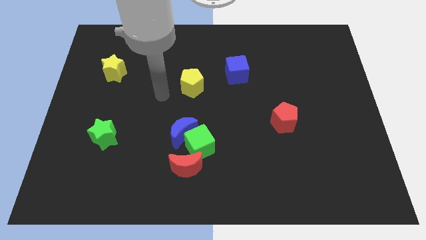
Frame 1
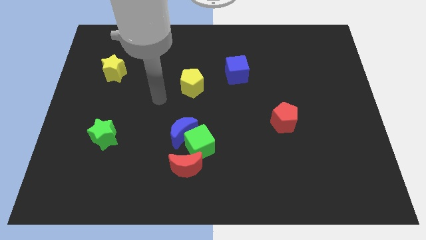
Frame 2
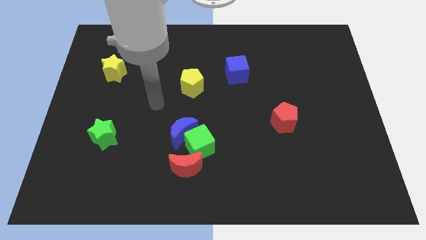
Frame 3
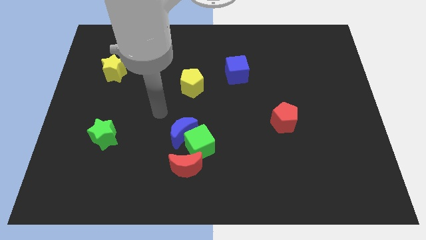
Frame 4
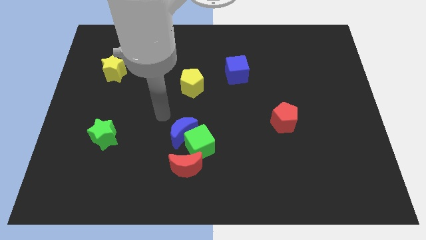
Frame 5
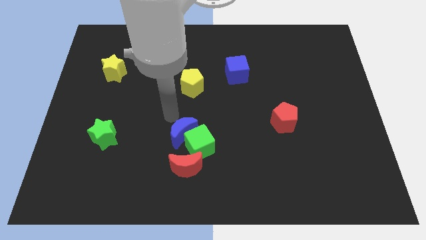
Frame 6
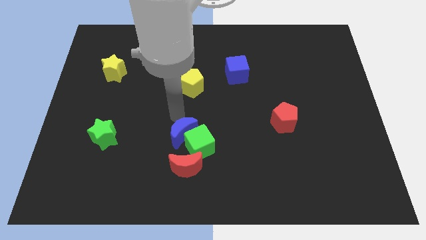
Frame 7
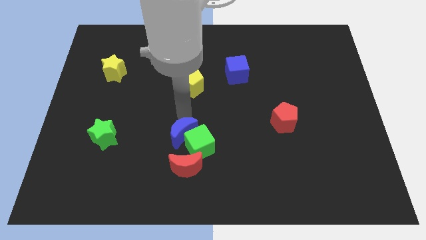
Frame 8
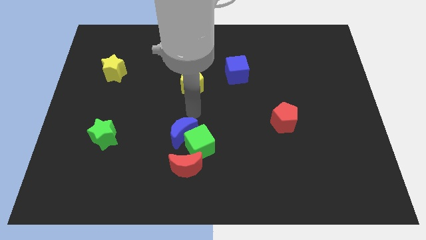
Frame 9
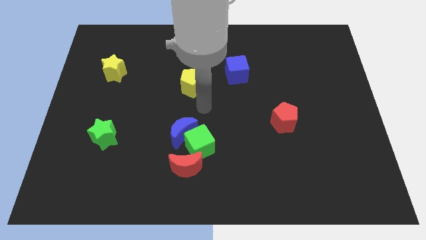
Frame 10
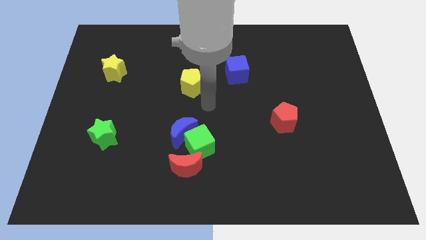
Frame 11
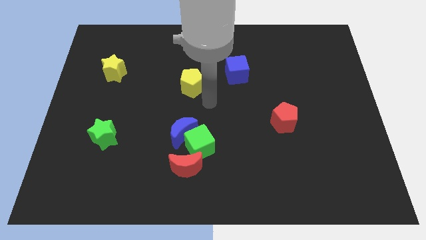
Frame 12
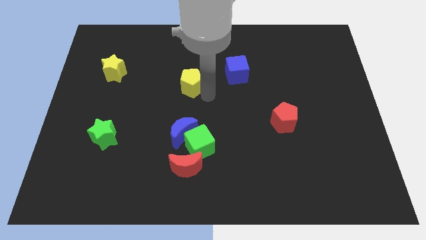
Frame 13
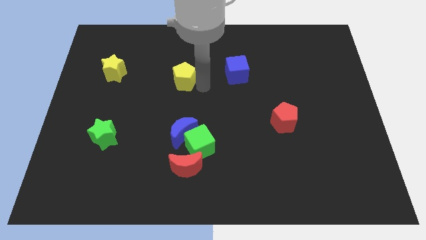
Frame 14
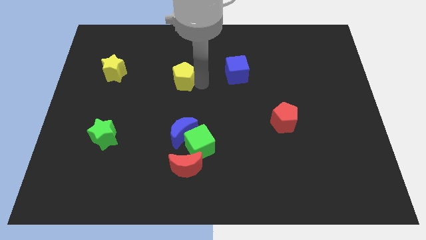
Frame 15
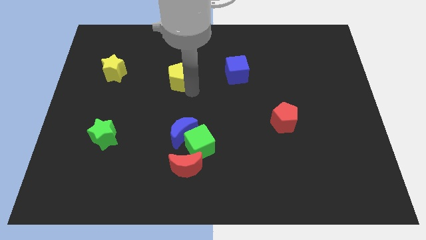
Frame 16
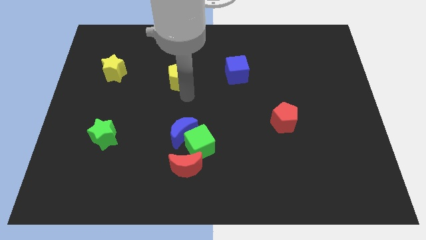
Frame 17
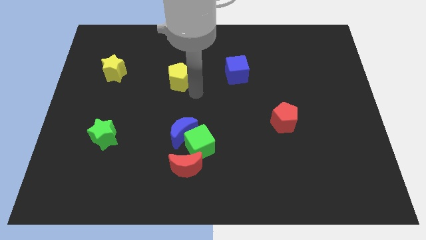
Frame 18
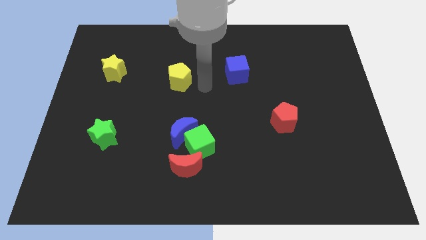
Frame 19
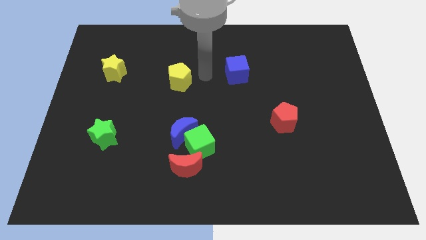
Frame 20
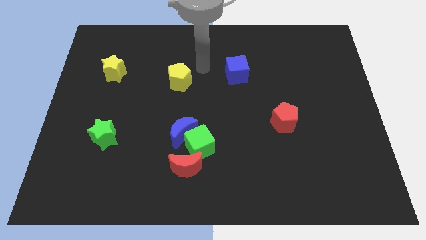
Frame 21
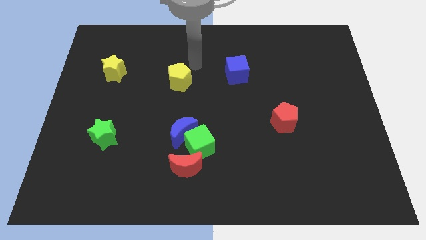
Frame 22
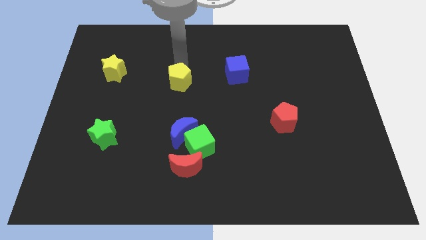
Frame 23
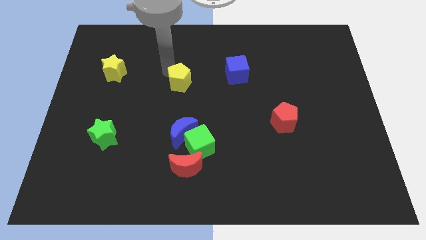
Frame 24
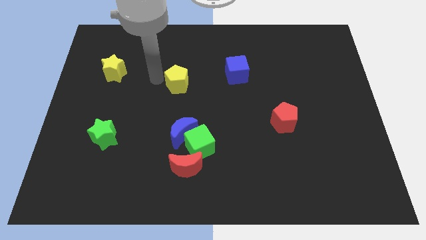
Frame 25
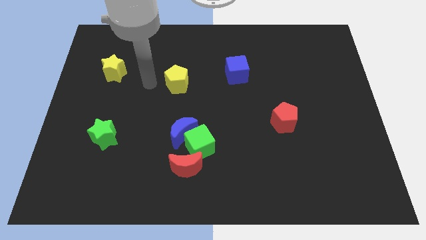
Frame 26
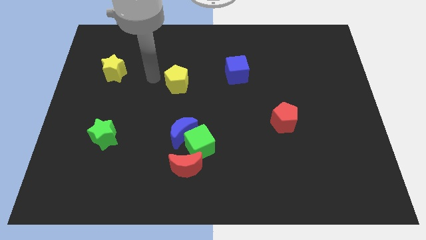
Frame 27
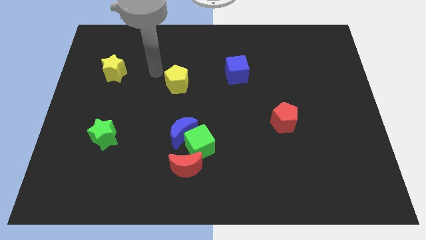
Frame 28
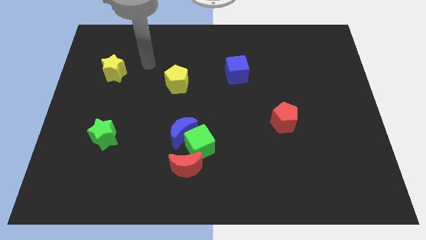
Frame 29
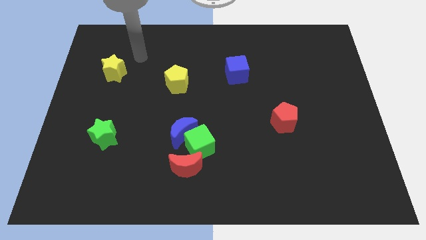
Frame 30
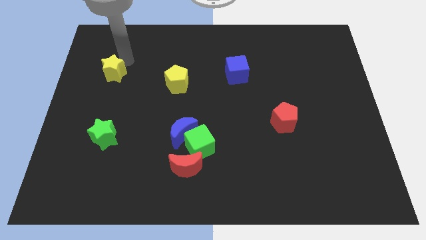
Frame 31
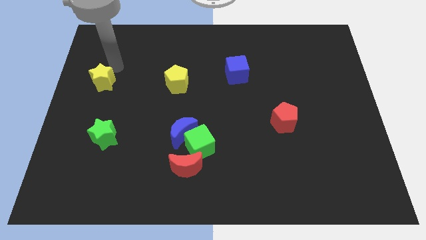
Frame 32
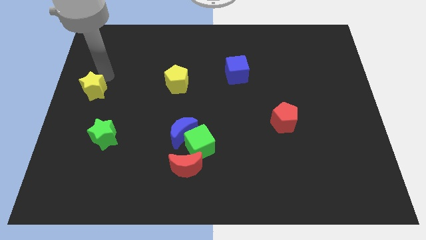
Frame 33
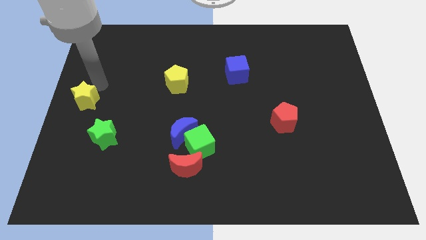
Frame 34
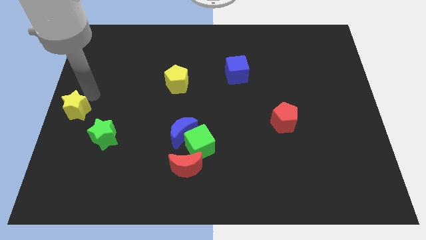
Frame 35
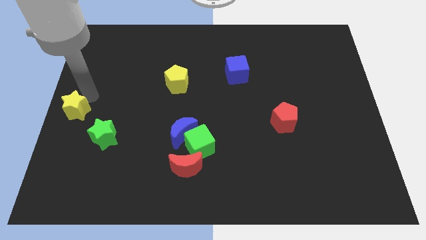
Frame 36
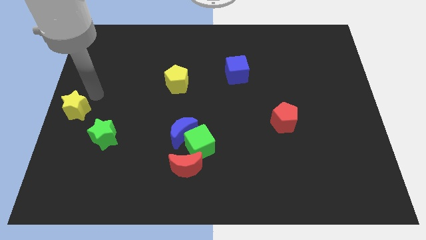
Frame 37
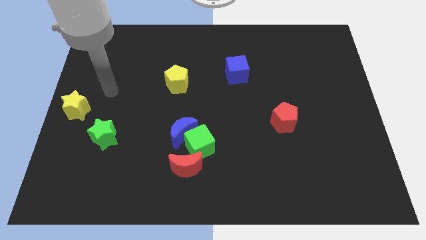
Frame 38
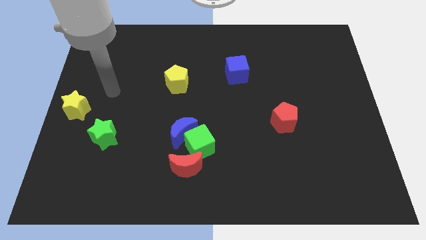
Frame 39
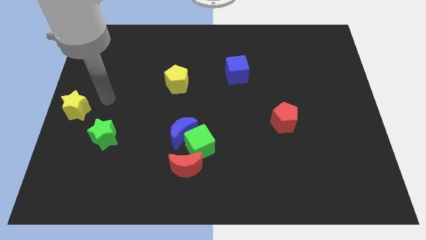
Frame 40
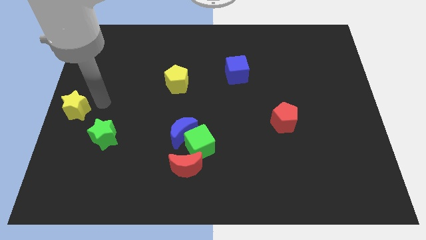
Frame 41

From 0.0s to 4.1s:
slightly move yellow blocks to the left of the board

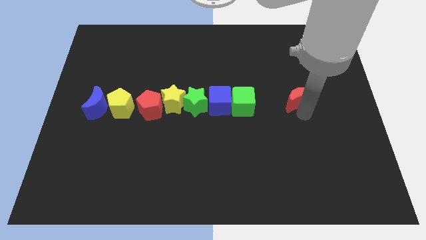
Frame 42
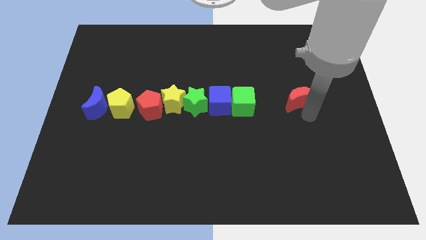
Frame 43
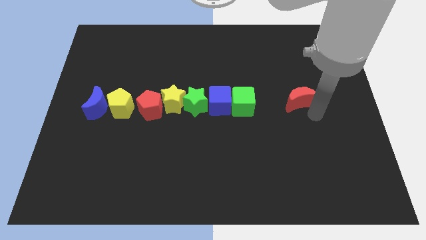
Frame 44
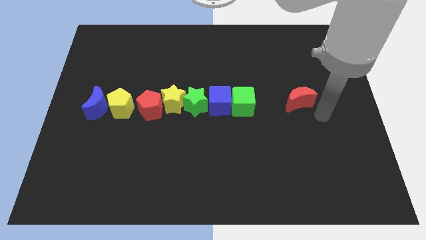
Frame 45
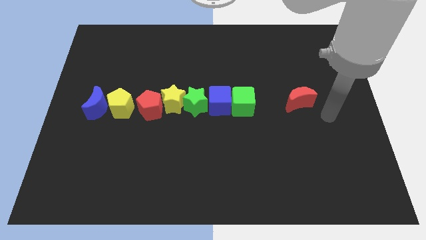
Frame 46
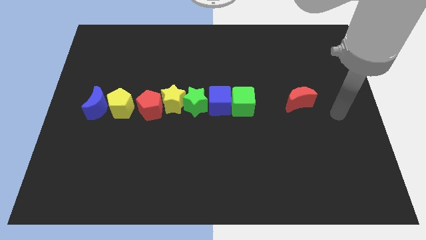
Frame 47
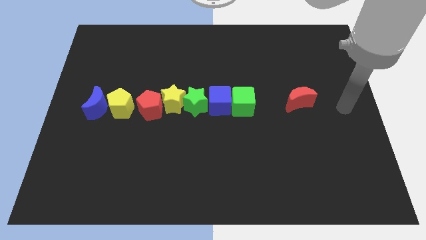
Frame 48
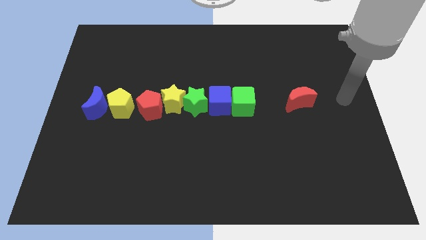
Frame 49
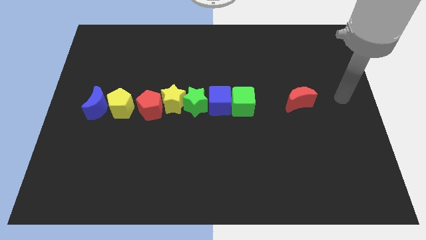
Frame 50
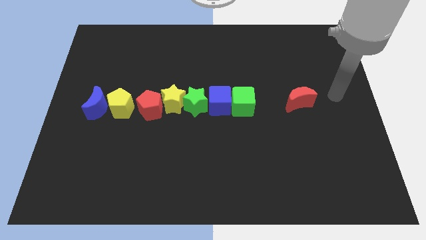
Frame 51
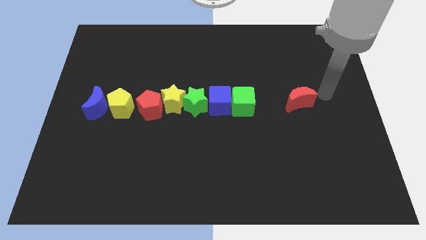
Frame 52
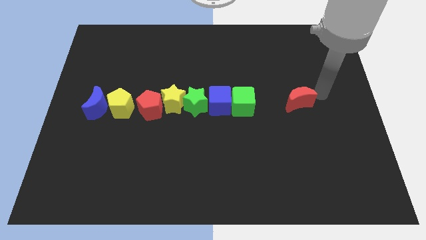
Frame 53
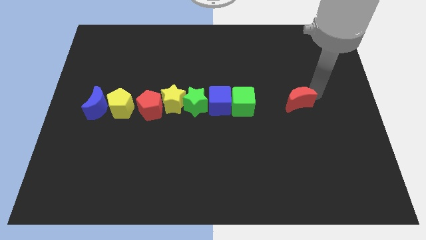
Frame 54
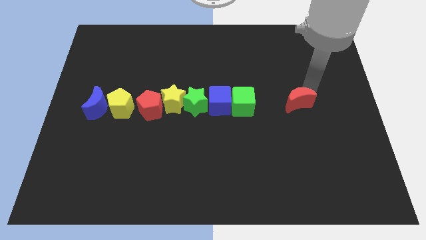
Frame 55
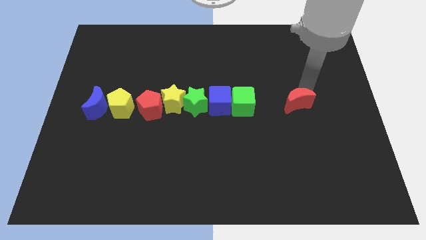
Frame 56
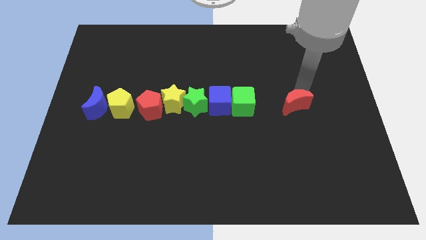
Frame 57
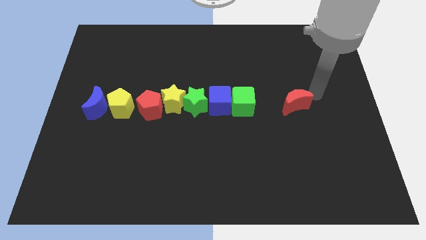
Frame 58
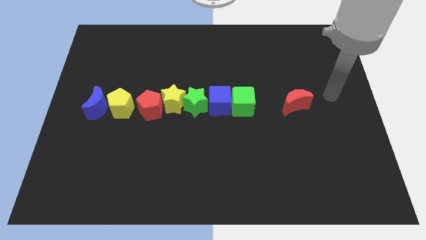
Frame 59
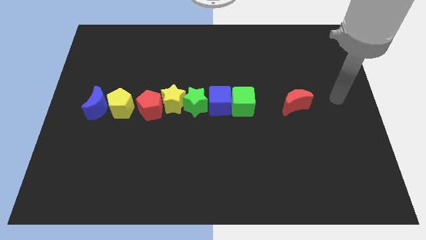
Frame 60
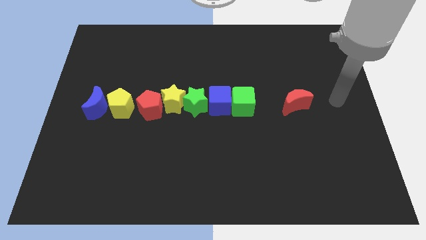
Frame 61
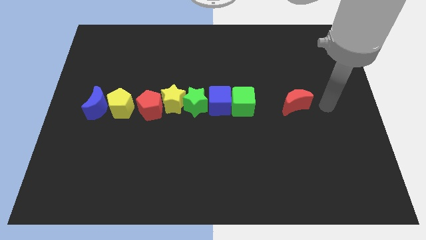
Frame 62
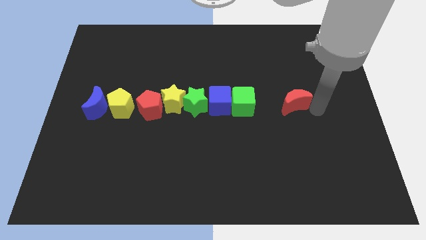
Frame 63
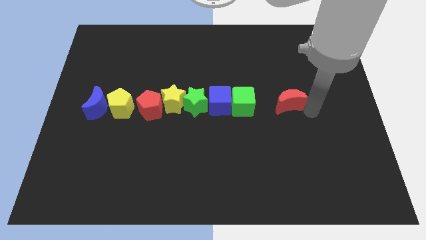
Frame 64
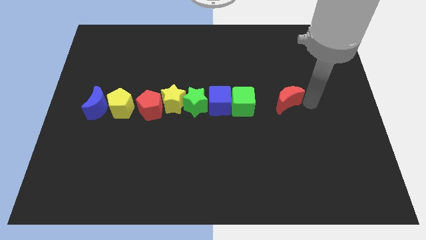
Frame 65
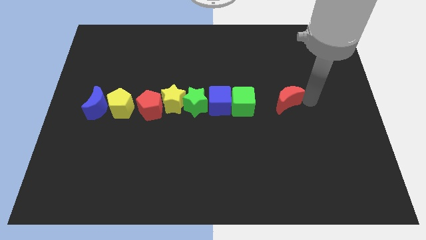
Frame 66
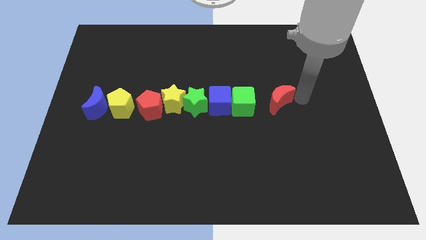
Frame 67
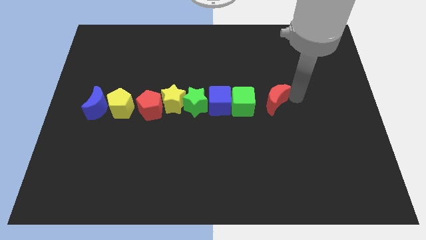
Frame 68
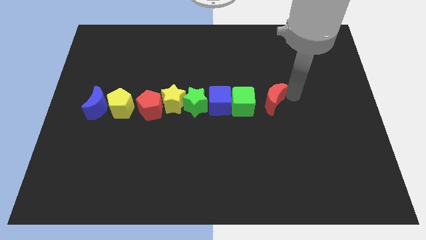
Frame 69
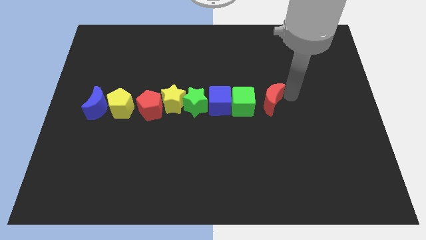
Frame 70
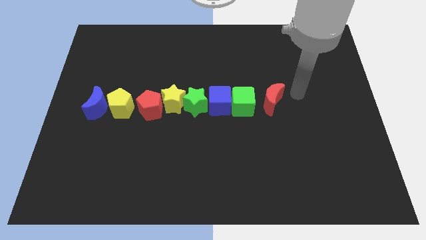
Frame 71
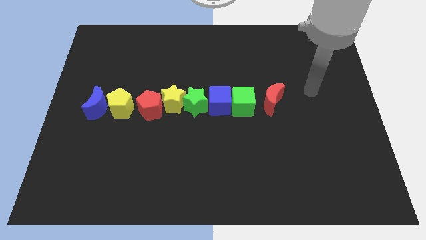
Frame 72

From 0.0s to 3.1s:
drag the red crescent close to the green cube

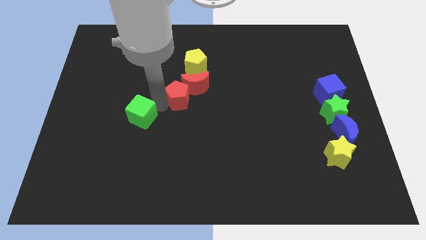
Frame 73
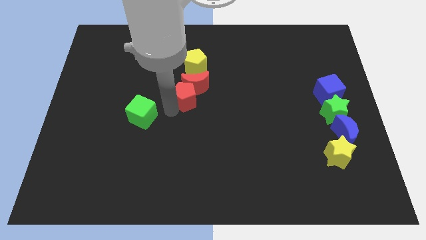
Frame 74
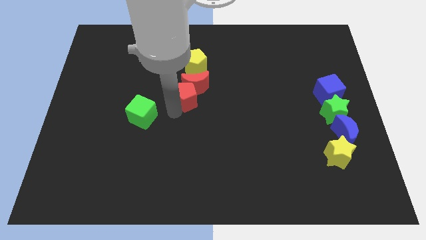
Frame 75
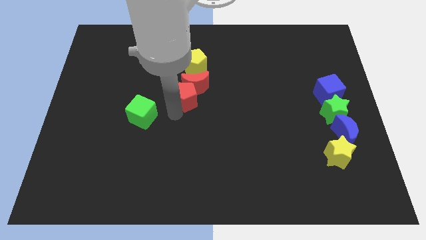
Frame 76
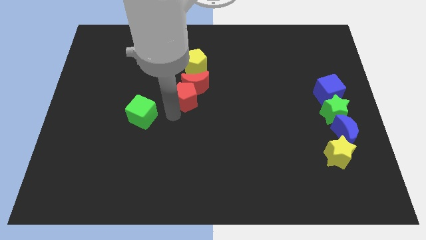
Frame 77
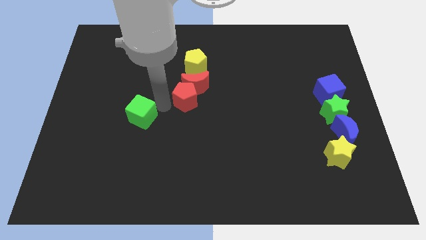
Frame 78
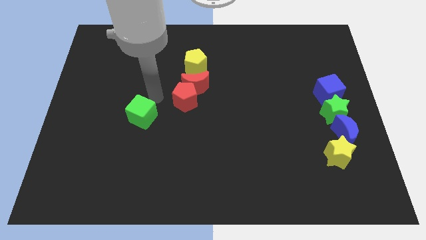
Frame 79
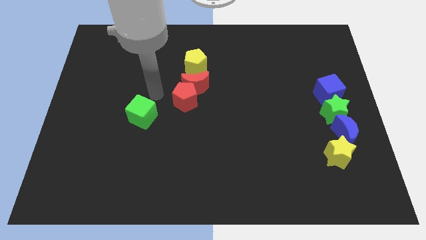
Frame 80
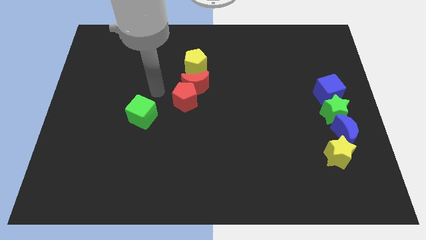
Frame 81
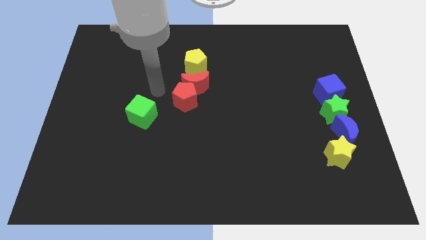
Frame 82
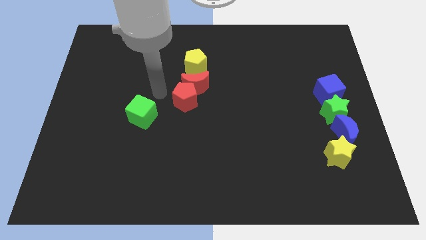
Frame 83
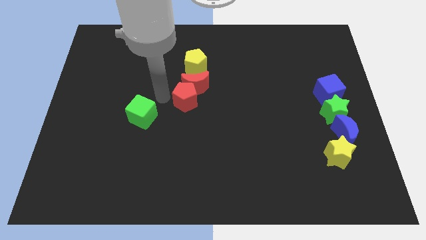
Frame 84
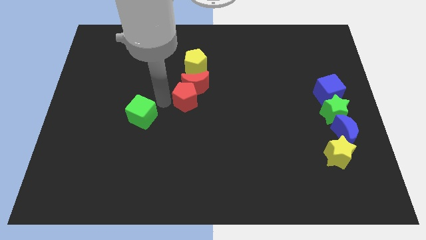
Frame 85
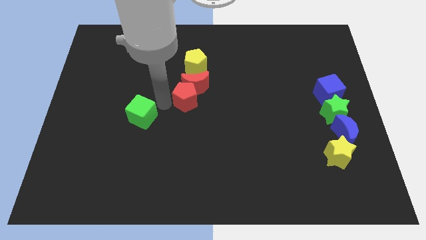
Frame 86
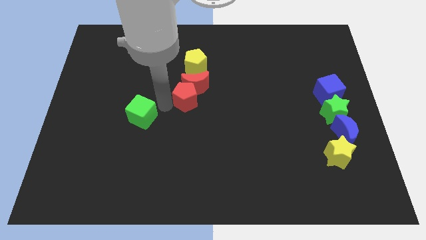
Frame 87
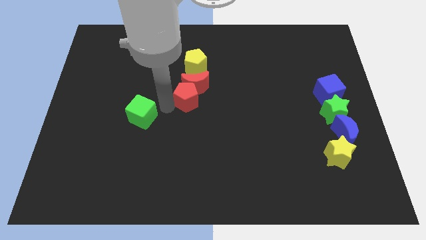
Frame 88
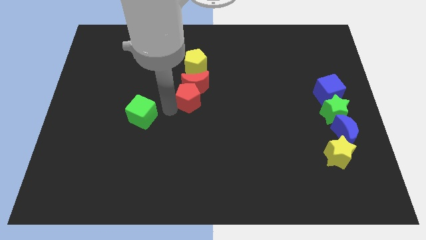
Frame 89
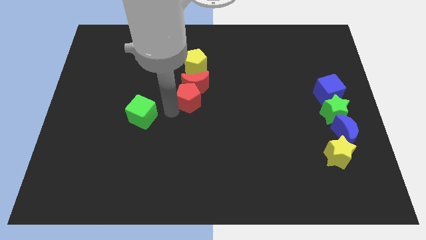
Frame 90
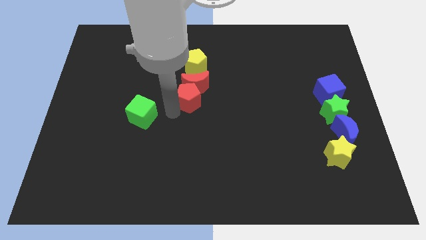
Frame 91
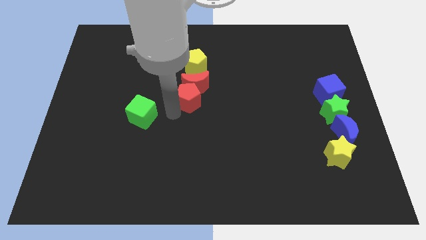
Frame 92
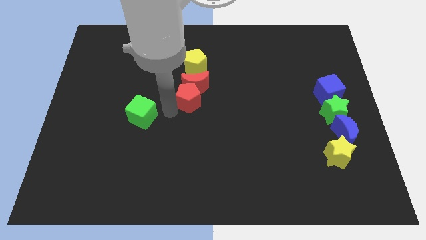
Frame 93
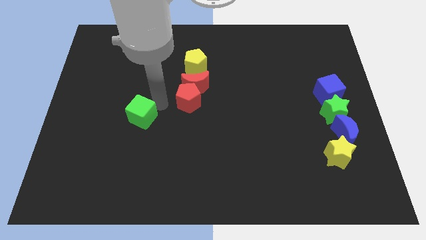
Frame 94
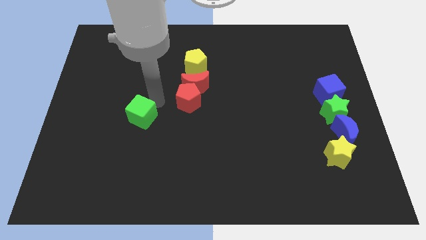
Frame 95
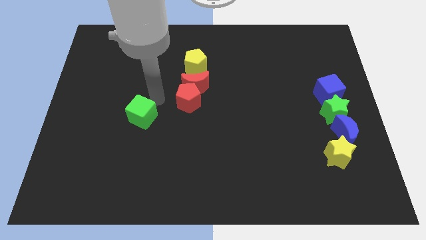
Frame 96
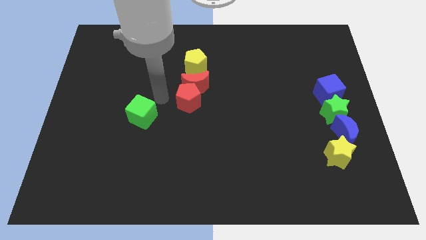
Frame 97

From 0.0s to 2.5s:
place red pentagon below red moon
